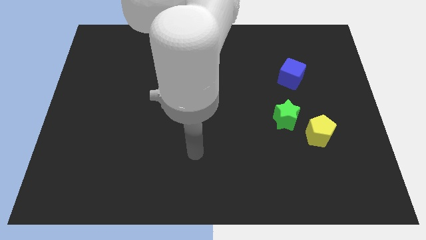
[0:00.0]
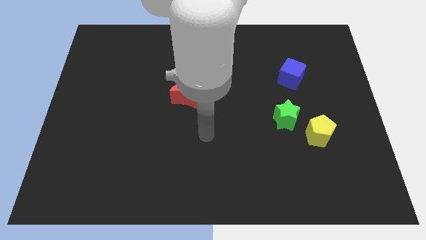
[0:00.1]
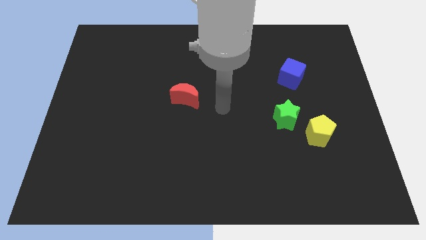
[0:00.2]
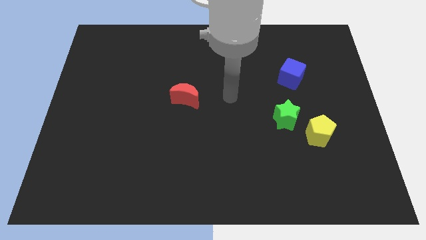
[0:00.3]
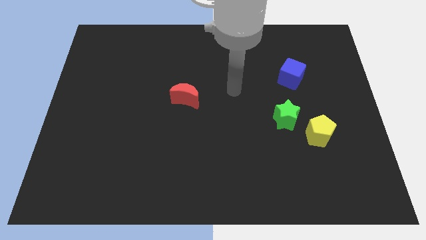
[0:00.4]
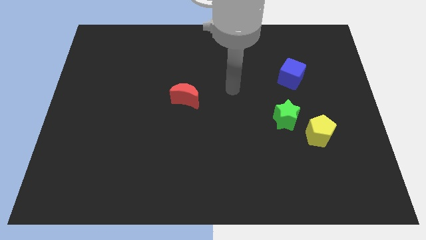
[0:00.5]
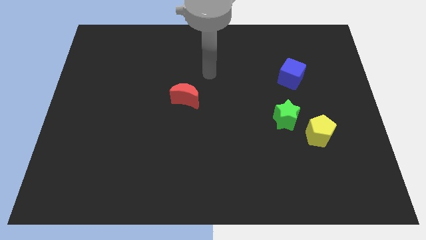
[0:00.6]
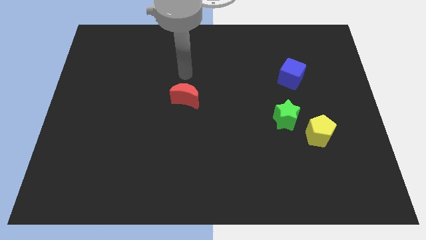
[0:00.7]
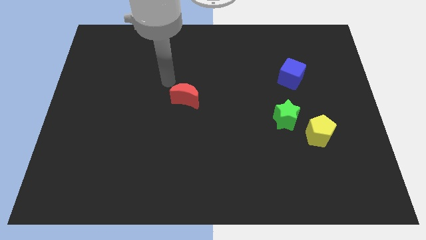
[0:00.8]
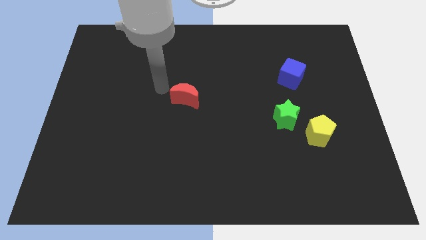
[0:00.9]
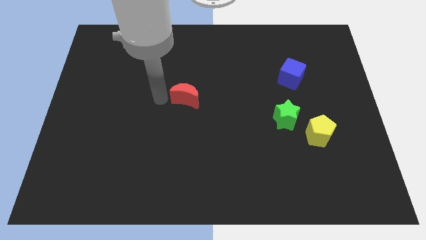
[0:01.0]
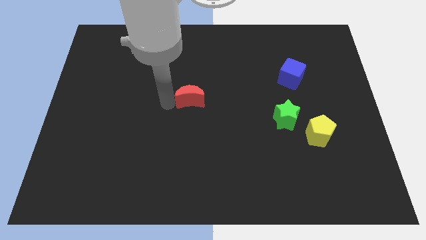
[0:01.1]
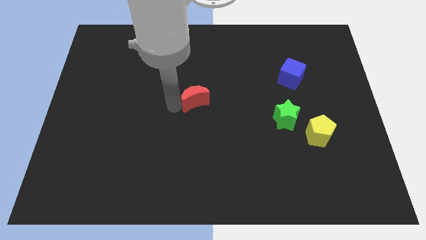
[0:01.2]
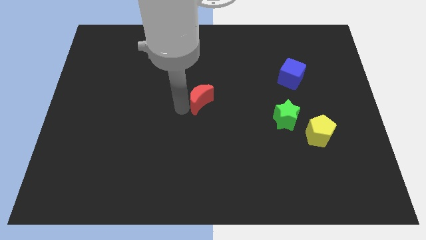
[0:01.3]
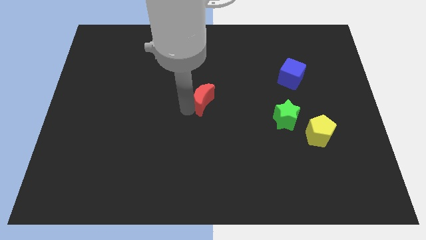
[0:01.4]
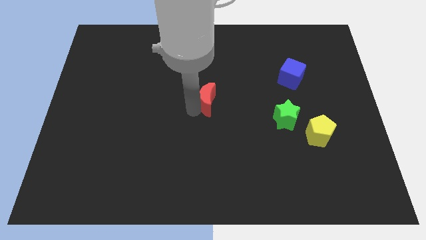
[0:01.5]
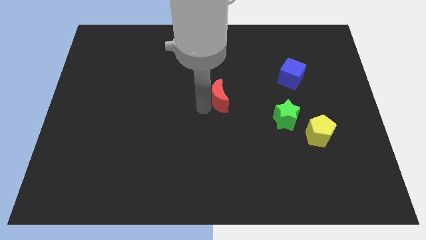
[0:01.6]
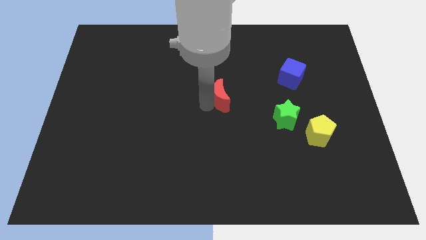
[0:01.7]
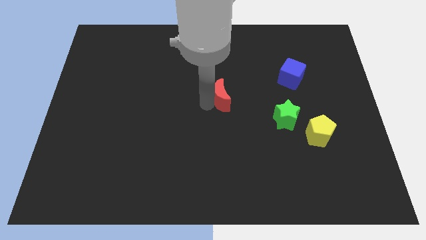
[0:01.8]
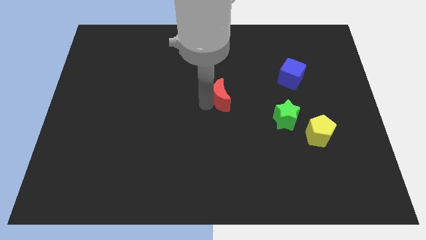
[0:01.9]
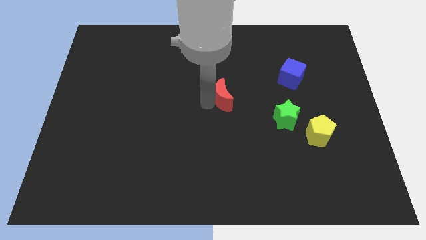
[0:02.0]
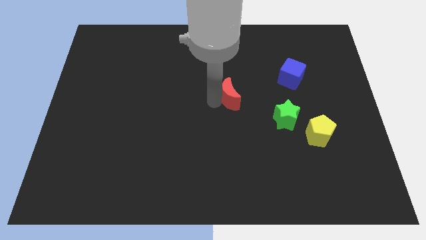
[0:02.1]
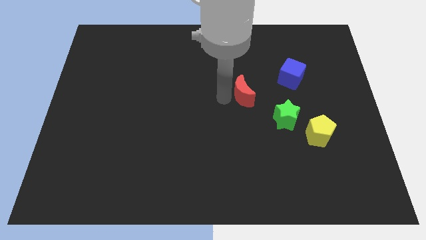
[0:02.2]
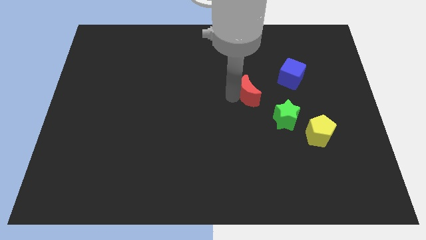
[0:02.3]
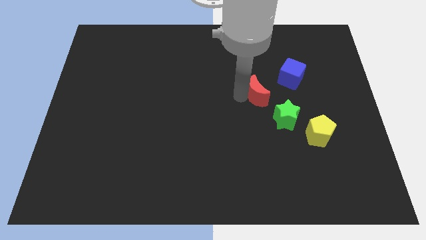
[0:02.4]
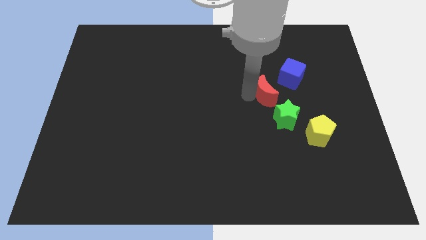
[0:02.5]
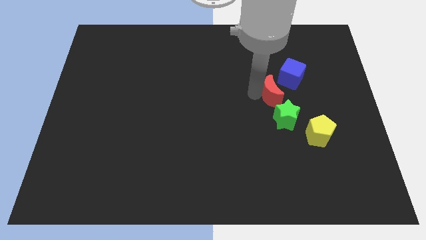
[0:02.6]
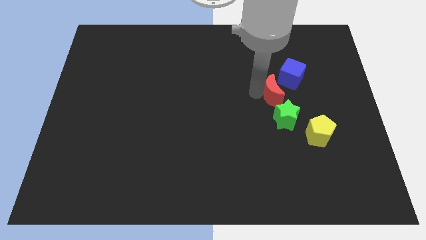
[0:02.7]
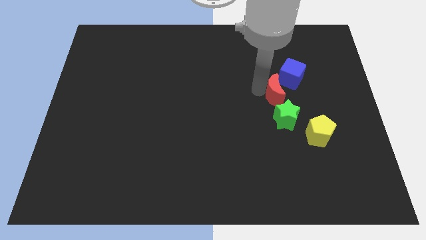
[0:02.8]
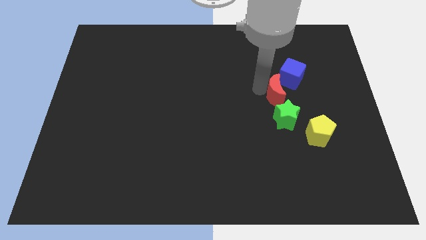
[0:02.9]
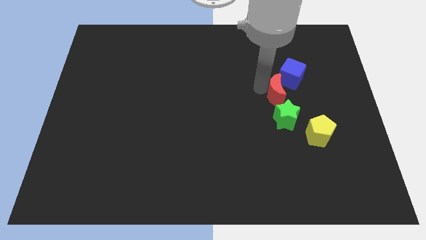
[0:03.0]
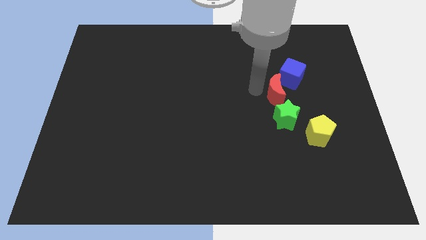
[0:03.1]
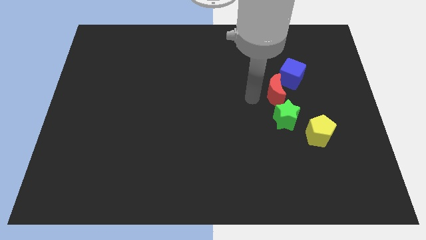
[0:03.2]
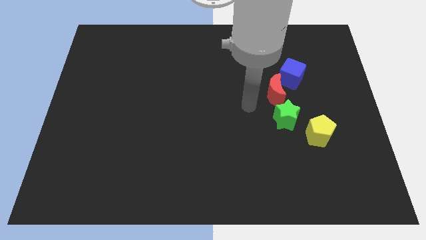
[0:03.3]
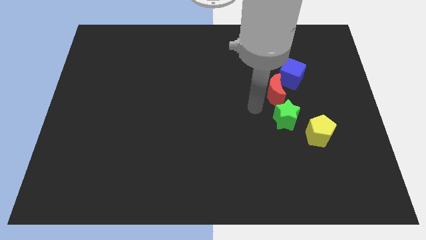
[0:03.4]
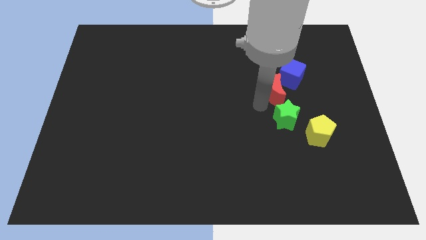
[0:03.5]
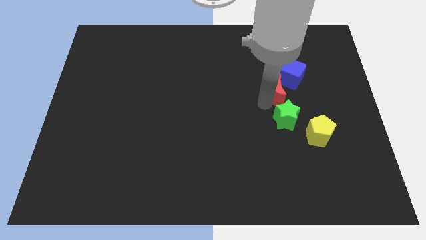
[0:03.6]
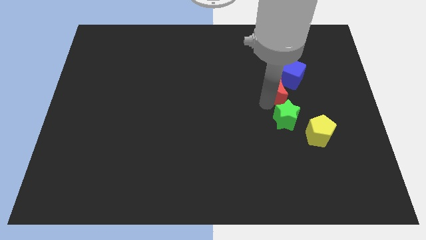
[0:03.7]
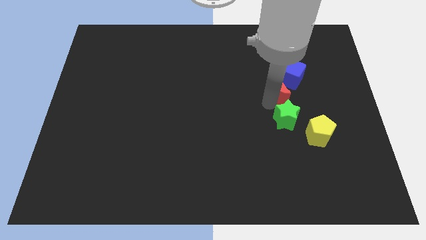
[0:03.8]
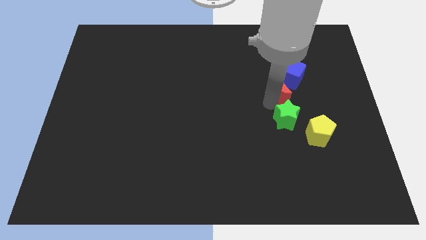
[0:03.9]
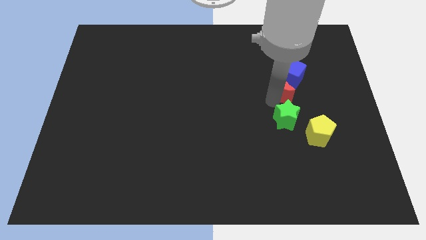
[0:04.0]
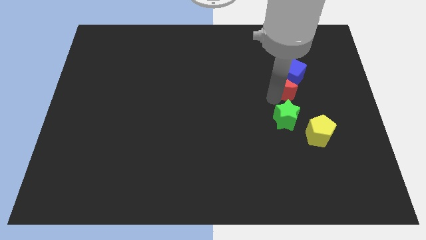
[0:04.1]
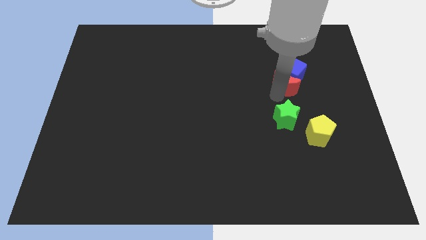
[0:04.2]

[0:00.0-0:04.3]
move the red moon close to the cube

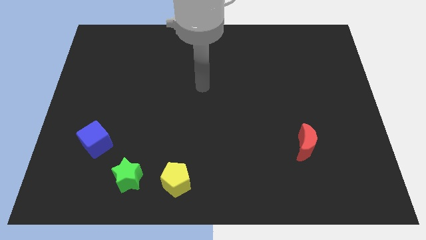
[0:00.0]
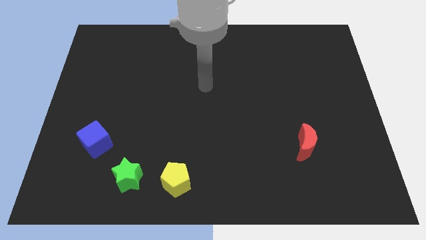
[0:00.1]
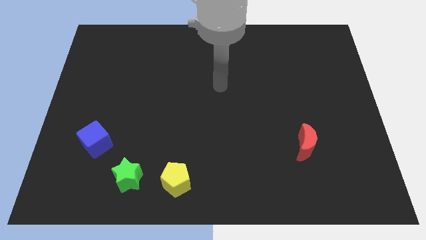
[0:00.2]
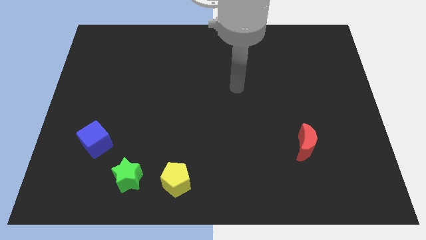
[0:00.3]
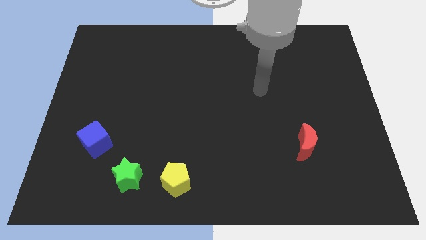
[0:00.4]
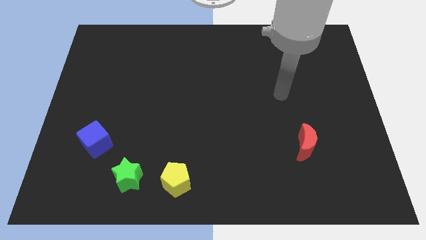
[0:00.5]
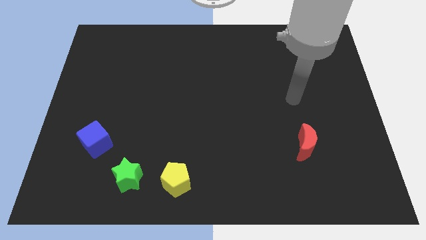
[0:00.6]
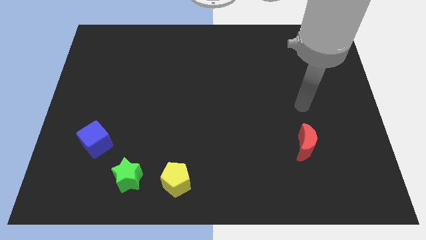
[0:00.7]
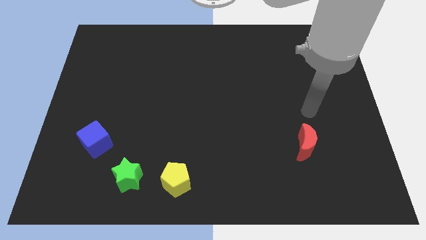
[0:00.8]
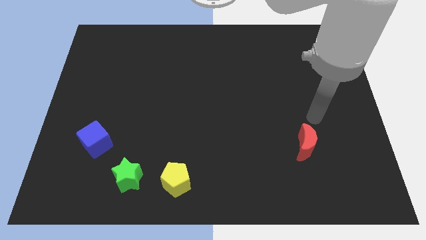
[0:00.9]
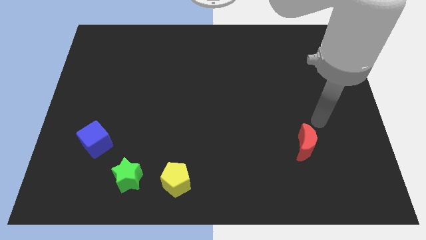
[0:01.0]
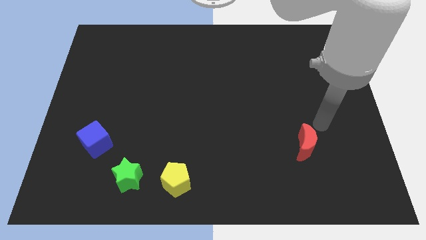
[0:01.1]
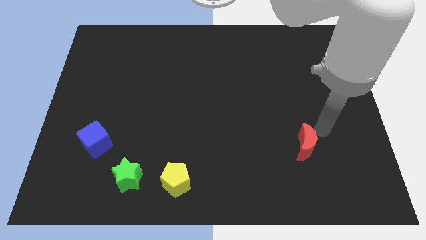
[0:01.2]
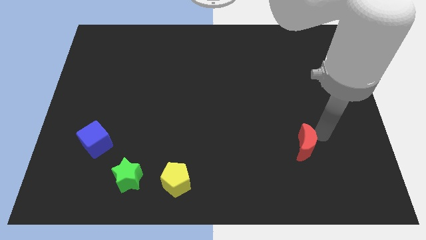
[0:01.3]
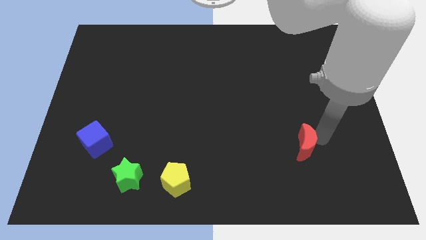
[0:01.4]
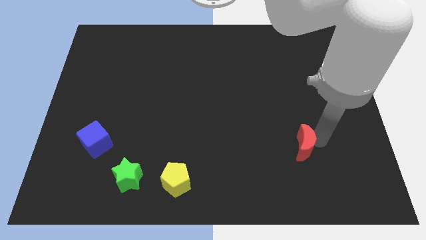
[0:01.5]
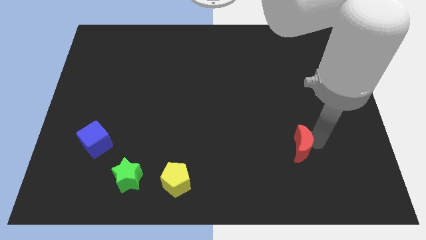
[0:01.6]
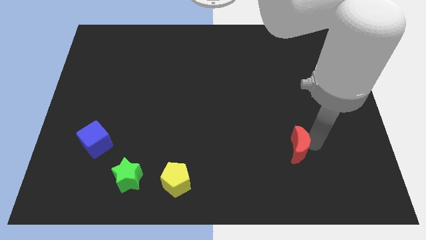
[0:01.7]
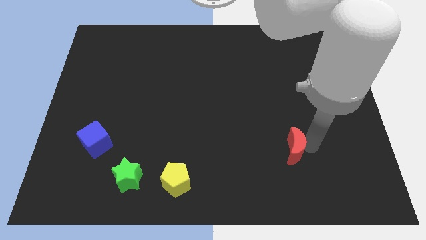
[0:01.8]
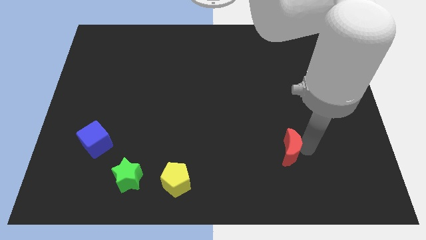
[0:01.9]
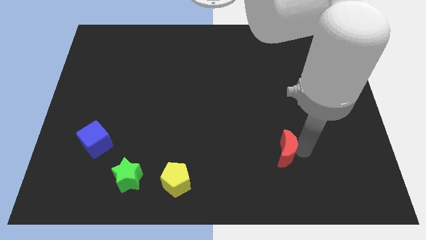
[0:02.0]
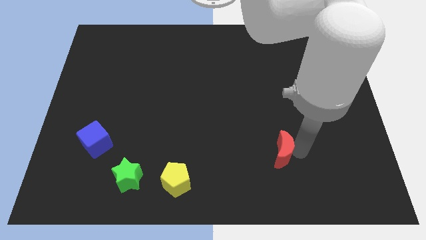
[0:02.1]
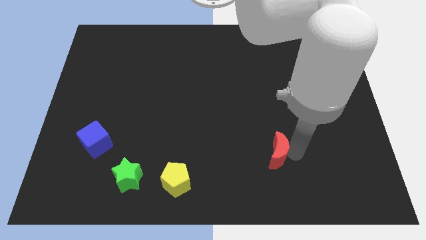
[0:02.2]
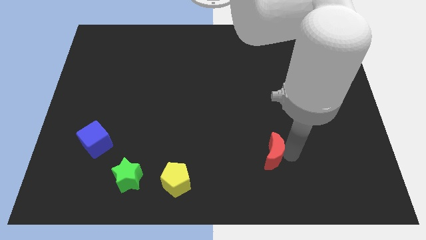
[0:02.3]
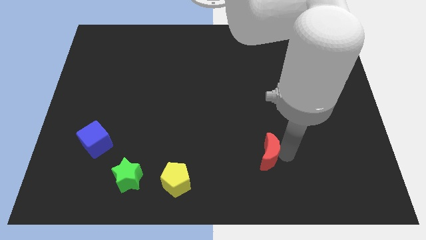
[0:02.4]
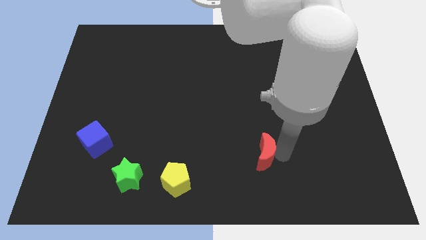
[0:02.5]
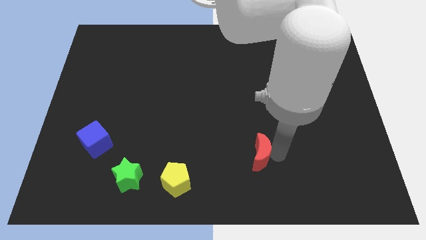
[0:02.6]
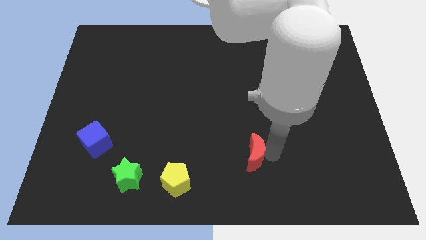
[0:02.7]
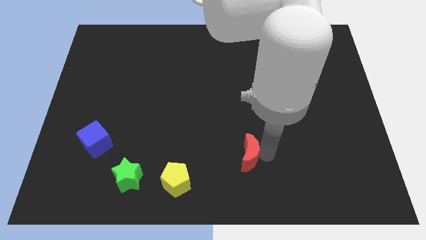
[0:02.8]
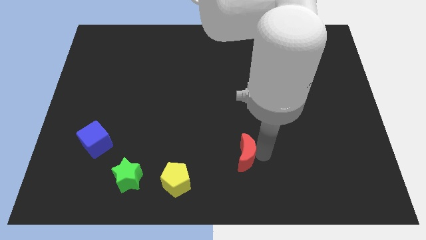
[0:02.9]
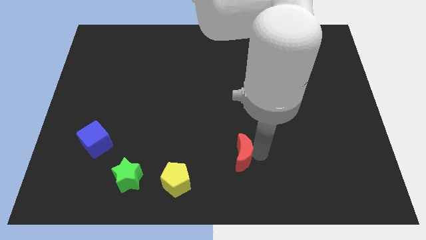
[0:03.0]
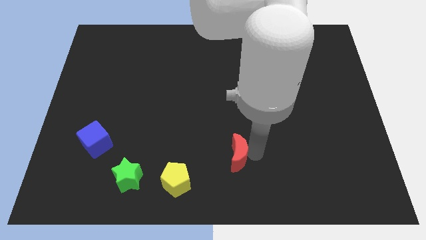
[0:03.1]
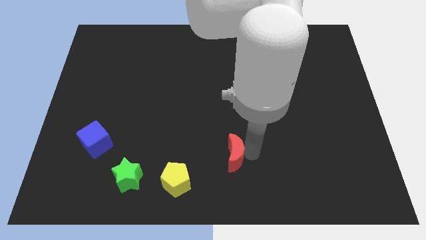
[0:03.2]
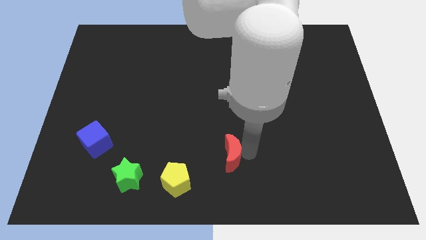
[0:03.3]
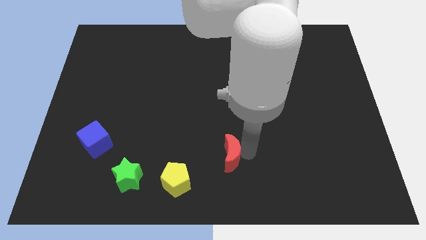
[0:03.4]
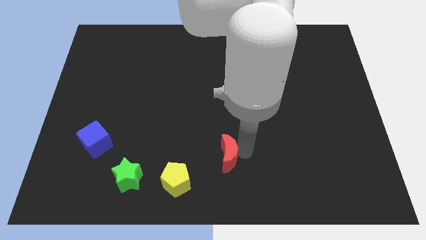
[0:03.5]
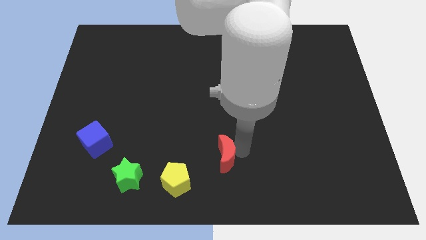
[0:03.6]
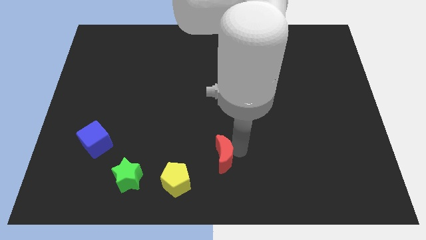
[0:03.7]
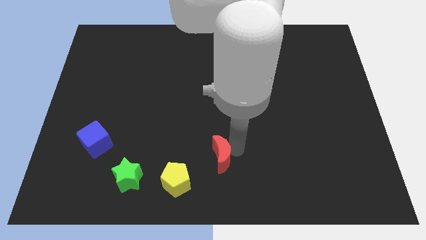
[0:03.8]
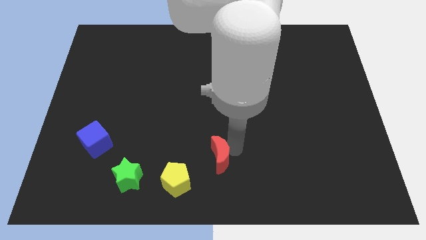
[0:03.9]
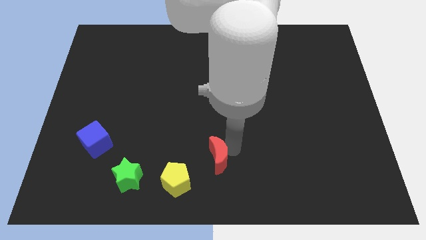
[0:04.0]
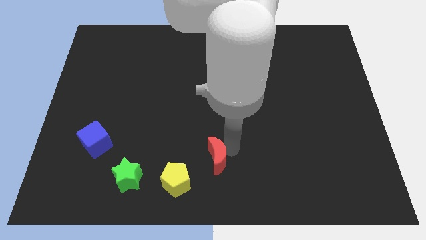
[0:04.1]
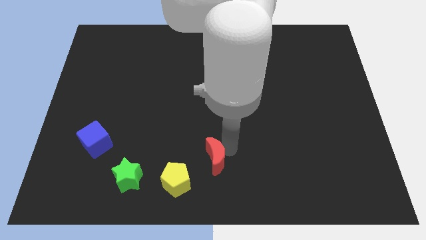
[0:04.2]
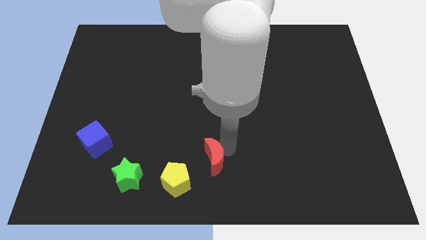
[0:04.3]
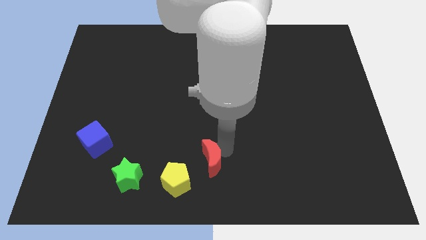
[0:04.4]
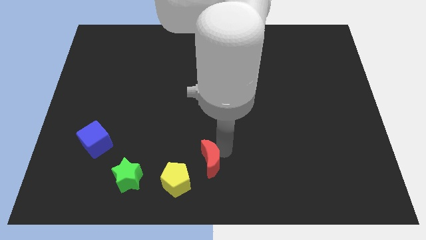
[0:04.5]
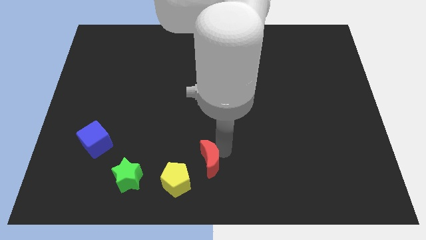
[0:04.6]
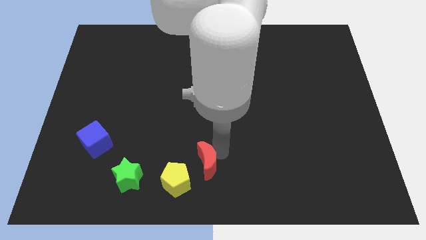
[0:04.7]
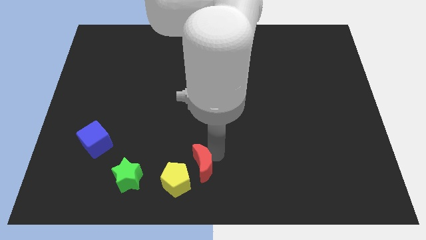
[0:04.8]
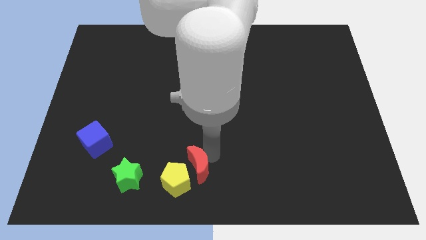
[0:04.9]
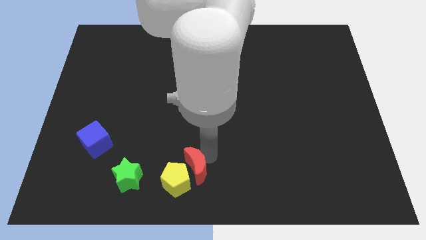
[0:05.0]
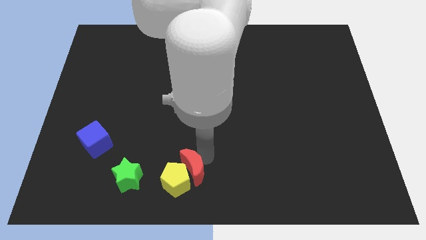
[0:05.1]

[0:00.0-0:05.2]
move the moon next to the yellow pentagon
